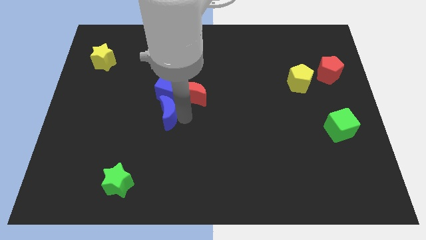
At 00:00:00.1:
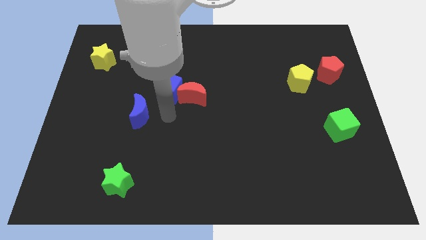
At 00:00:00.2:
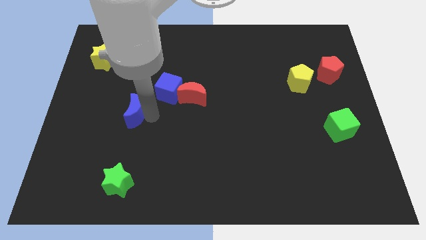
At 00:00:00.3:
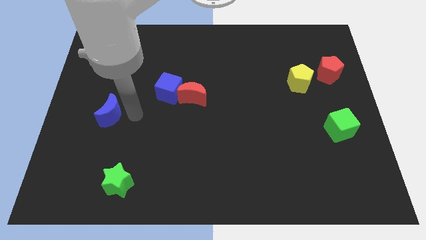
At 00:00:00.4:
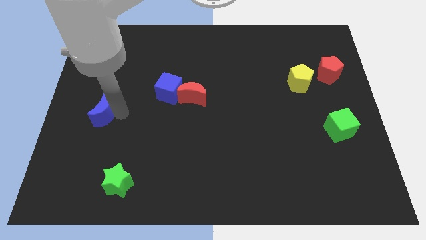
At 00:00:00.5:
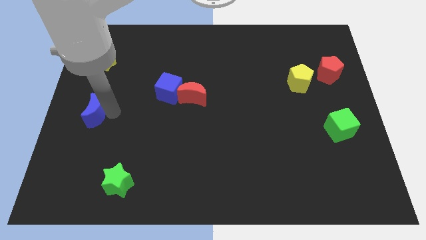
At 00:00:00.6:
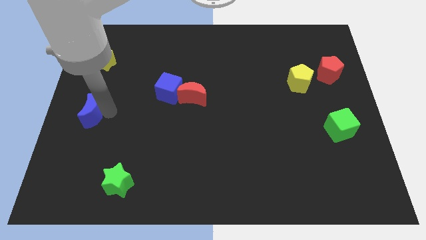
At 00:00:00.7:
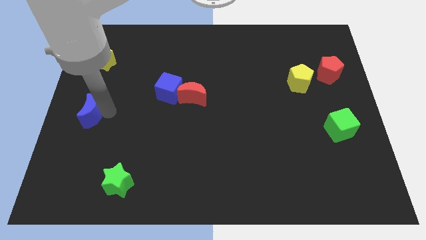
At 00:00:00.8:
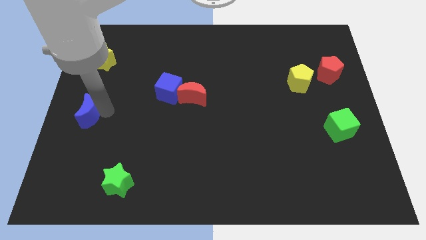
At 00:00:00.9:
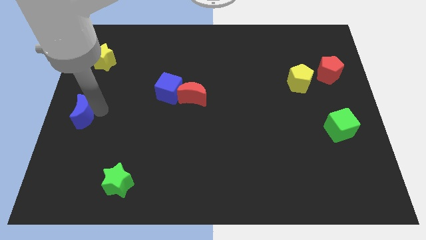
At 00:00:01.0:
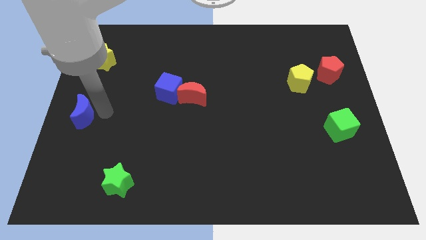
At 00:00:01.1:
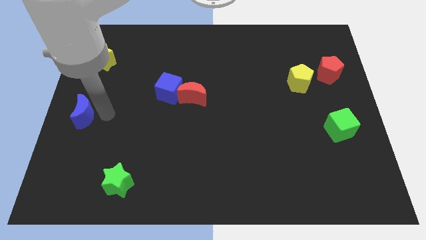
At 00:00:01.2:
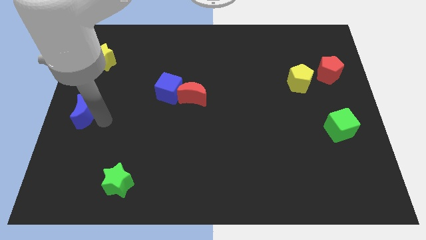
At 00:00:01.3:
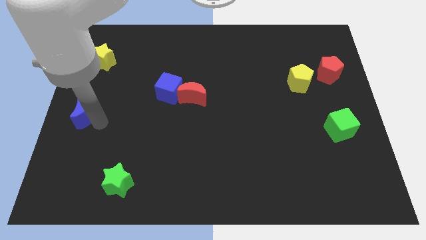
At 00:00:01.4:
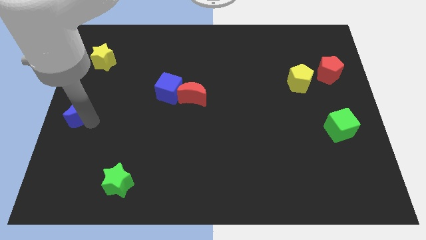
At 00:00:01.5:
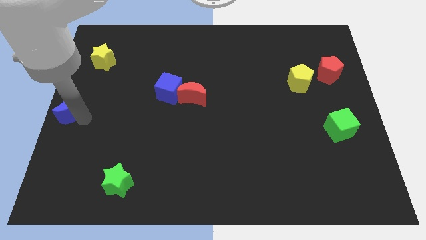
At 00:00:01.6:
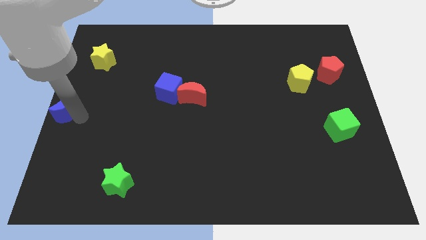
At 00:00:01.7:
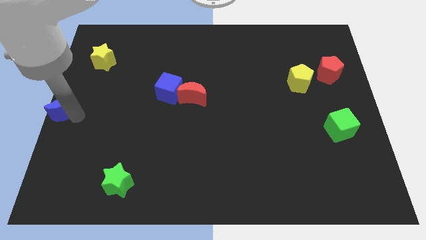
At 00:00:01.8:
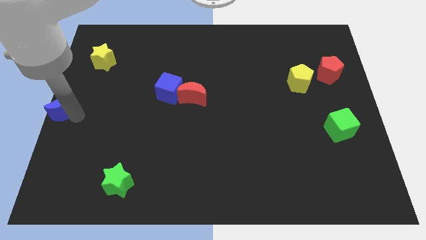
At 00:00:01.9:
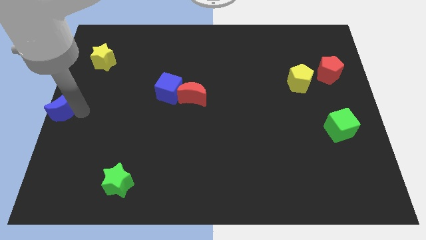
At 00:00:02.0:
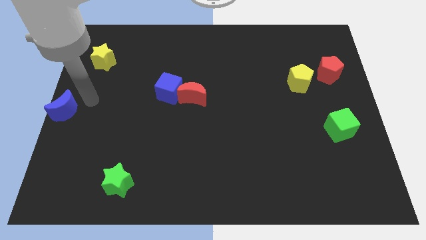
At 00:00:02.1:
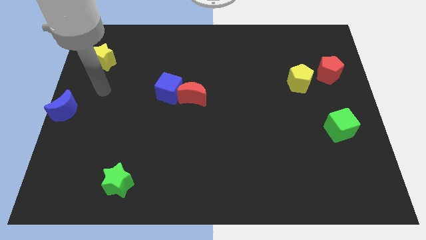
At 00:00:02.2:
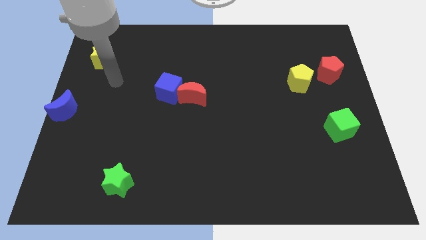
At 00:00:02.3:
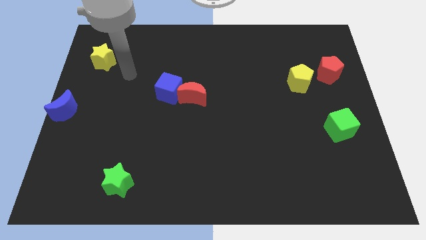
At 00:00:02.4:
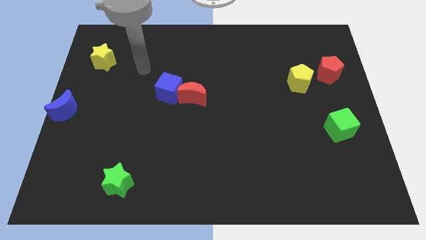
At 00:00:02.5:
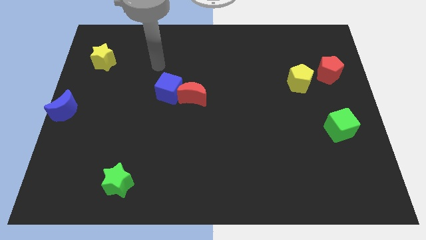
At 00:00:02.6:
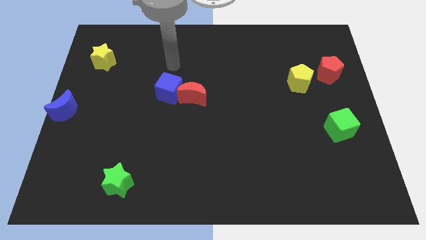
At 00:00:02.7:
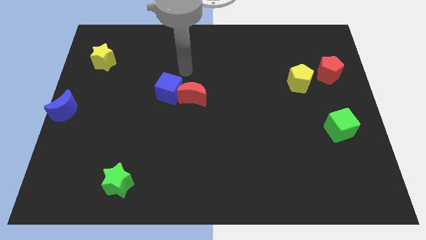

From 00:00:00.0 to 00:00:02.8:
move blue moon to the left middle

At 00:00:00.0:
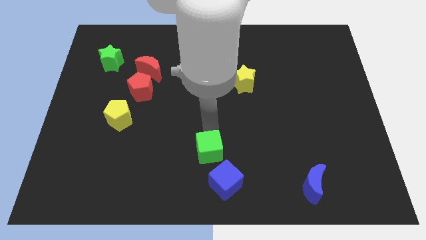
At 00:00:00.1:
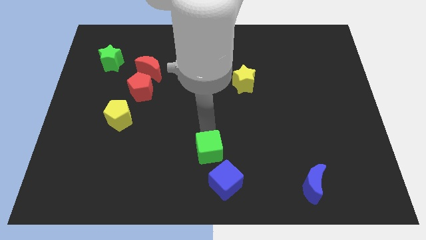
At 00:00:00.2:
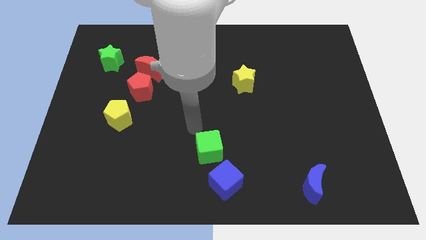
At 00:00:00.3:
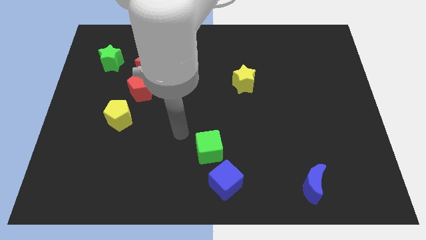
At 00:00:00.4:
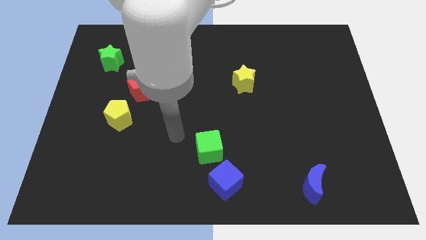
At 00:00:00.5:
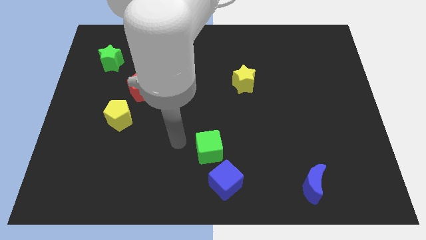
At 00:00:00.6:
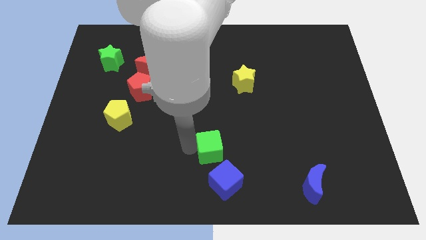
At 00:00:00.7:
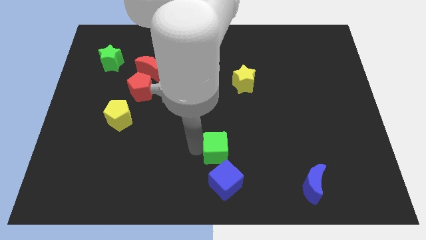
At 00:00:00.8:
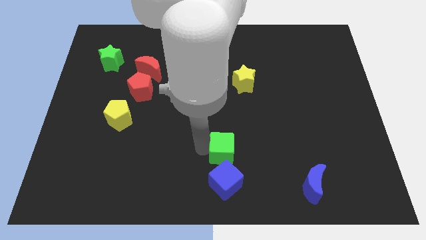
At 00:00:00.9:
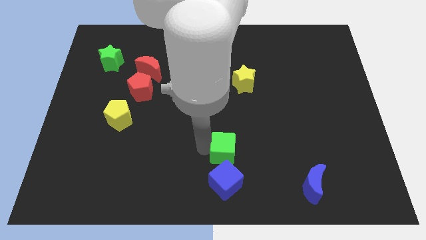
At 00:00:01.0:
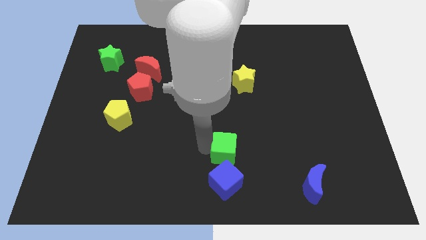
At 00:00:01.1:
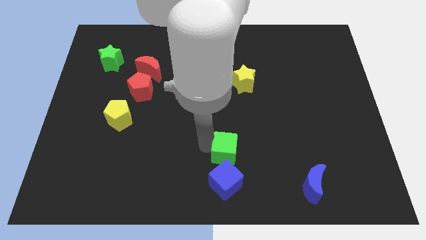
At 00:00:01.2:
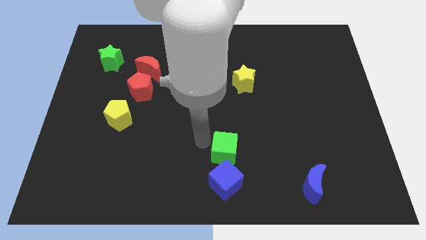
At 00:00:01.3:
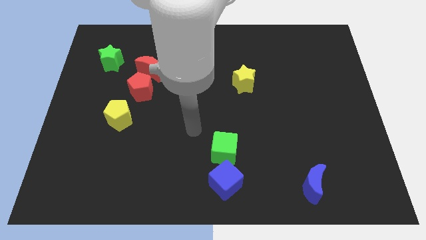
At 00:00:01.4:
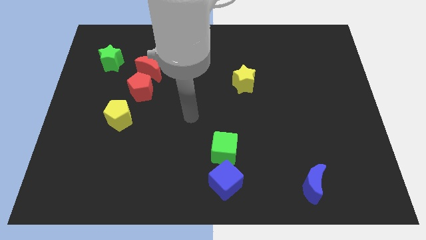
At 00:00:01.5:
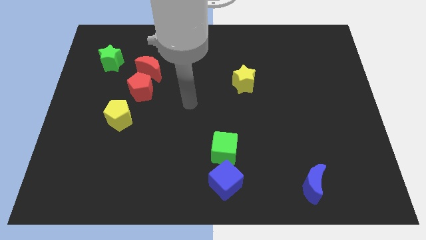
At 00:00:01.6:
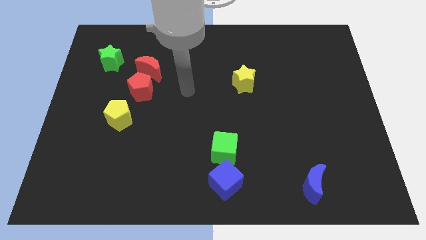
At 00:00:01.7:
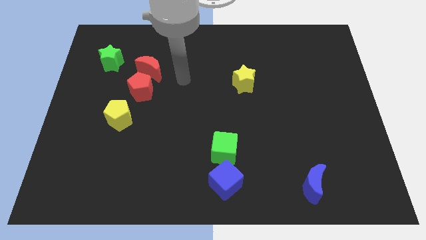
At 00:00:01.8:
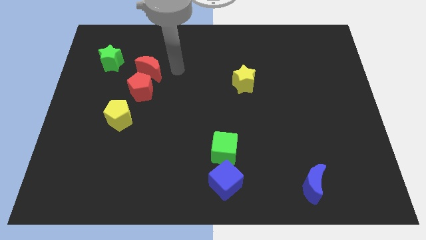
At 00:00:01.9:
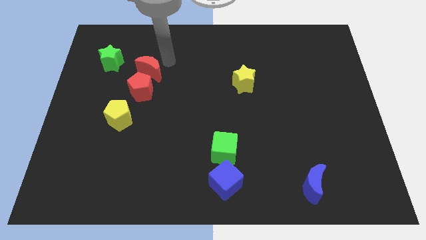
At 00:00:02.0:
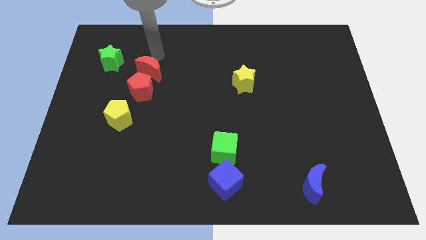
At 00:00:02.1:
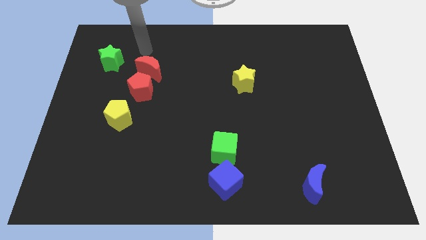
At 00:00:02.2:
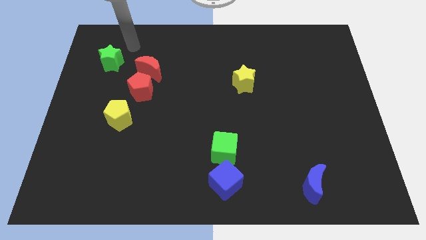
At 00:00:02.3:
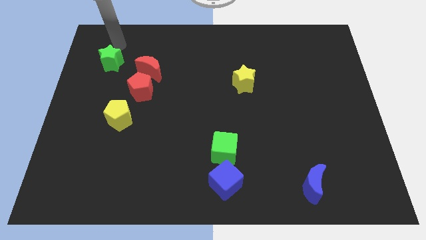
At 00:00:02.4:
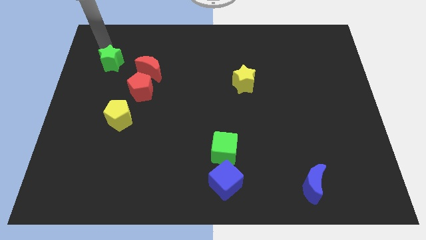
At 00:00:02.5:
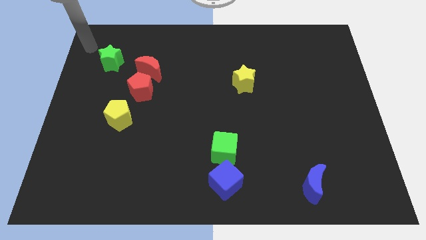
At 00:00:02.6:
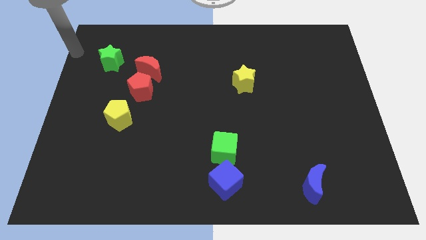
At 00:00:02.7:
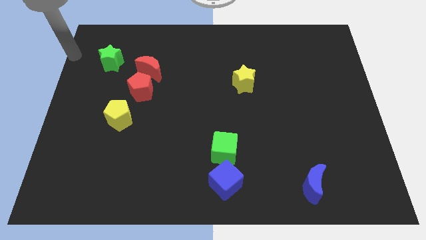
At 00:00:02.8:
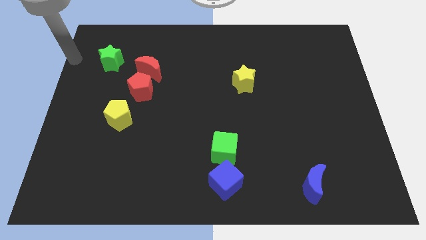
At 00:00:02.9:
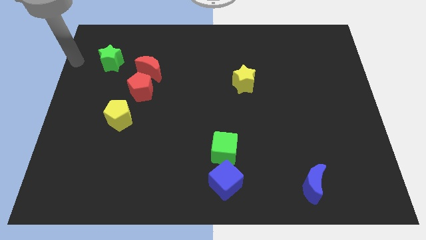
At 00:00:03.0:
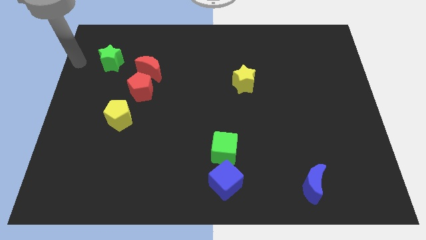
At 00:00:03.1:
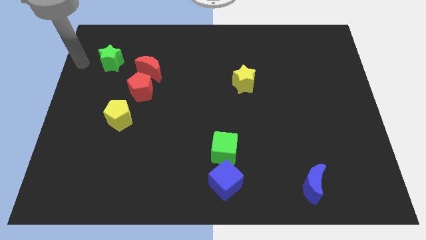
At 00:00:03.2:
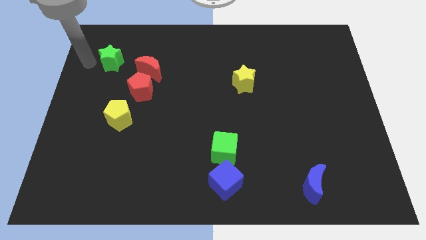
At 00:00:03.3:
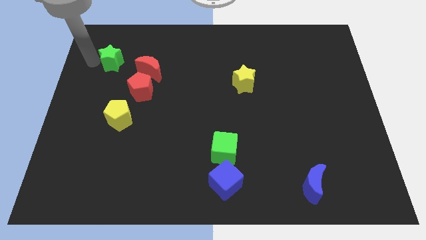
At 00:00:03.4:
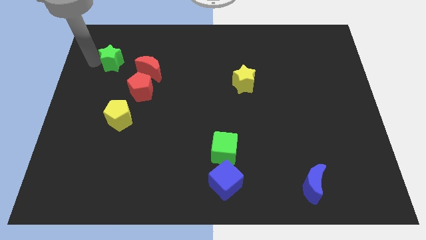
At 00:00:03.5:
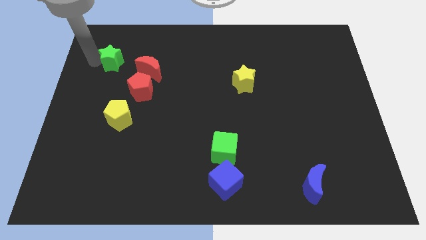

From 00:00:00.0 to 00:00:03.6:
move your arm left to the green star

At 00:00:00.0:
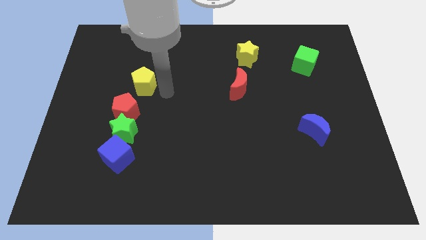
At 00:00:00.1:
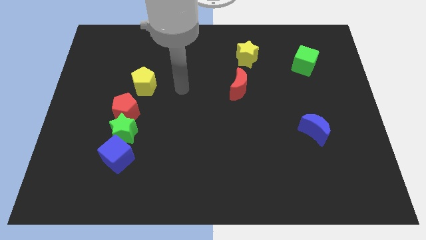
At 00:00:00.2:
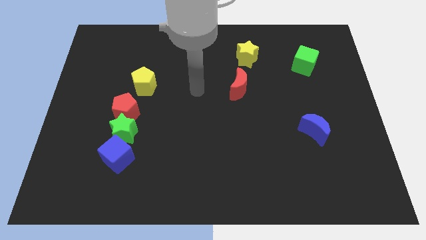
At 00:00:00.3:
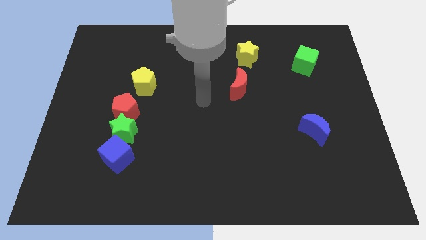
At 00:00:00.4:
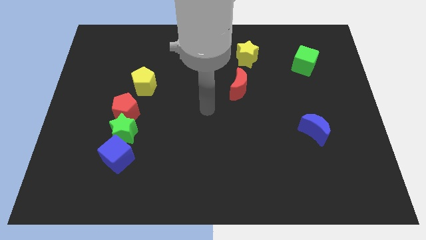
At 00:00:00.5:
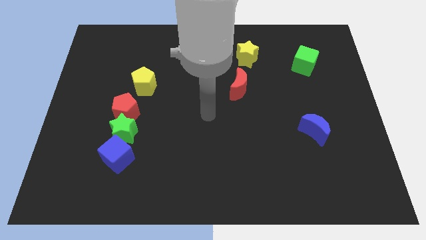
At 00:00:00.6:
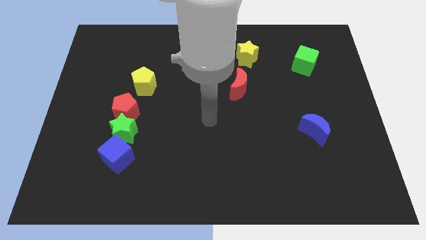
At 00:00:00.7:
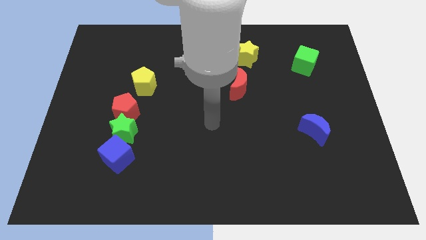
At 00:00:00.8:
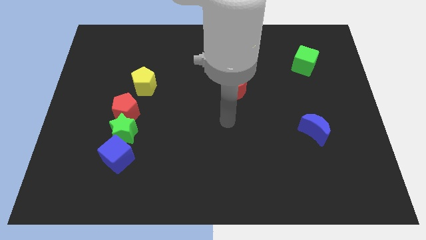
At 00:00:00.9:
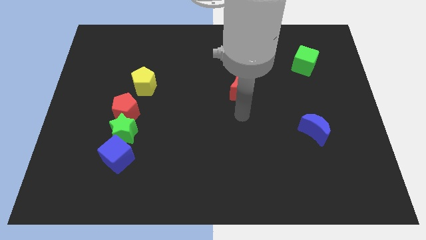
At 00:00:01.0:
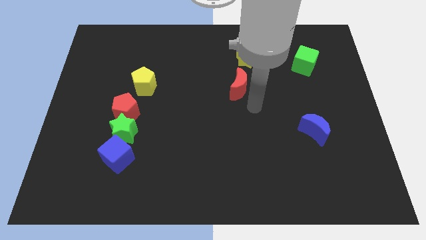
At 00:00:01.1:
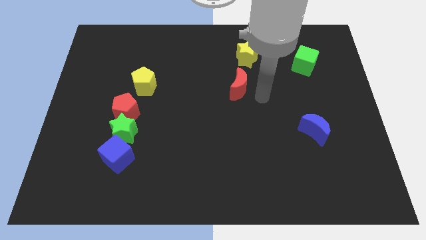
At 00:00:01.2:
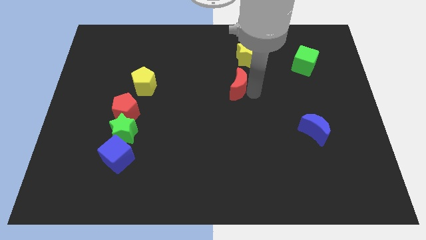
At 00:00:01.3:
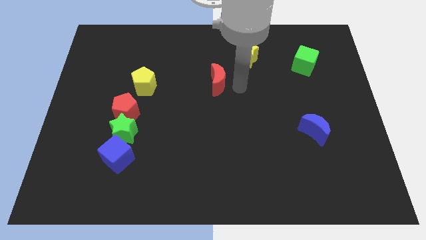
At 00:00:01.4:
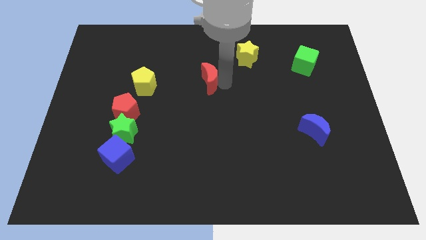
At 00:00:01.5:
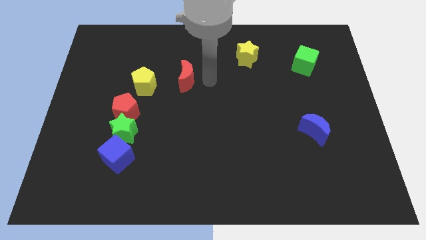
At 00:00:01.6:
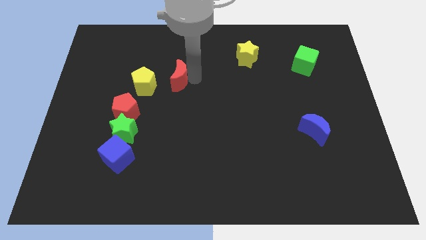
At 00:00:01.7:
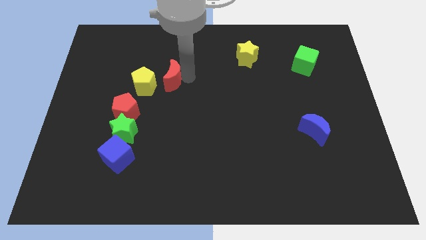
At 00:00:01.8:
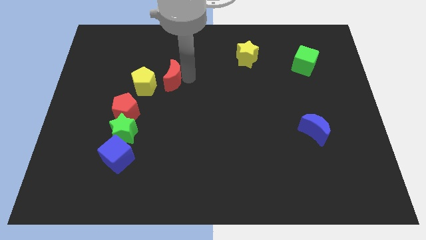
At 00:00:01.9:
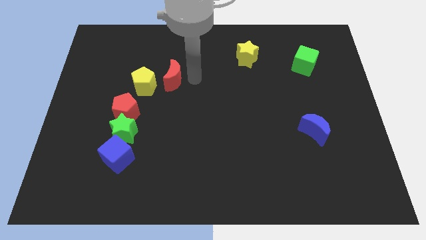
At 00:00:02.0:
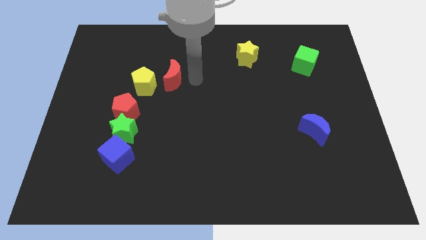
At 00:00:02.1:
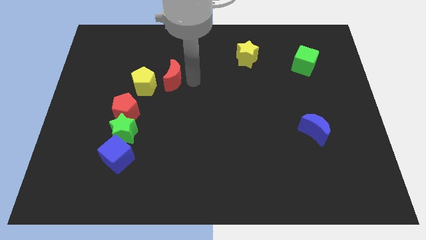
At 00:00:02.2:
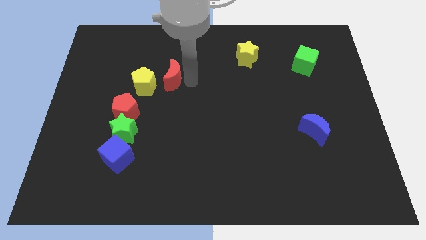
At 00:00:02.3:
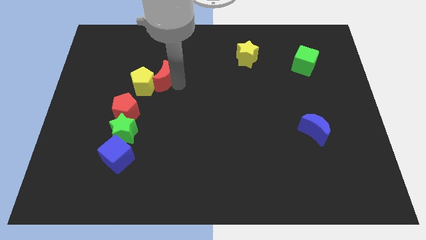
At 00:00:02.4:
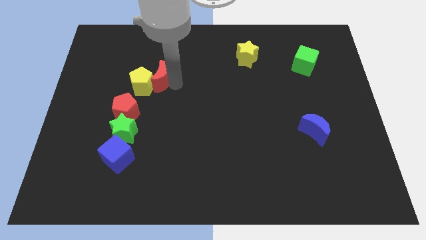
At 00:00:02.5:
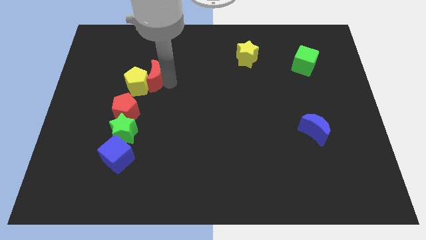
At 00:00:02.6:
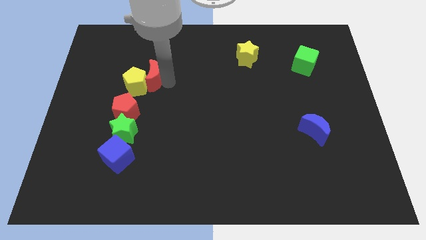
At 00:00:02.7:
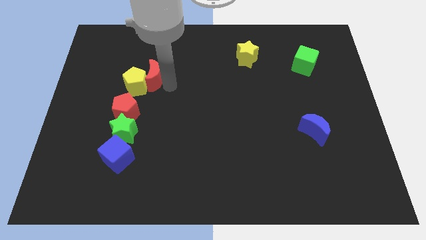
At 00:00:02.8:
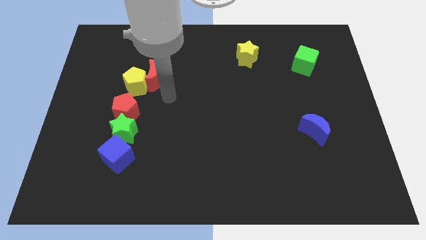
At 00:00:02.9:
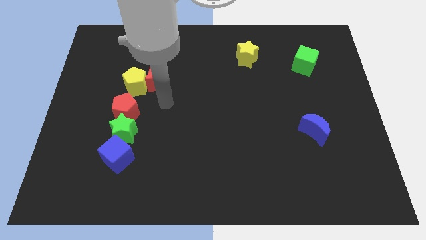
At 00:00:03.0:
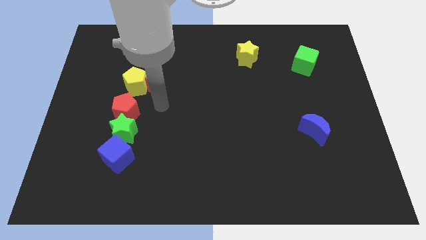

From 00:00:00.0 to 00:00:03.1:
move the red crescent into the yellow pentagon
